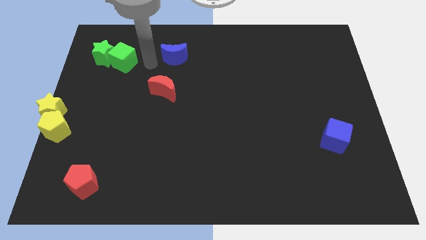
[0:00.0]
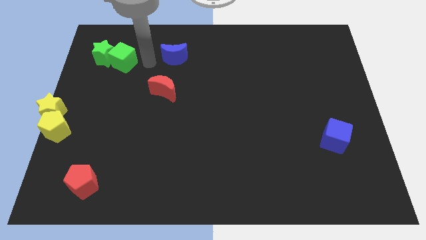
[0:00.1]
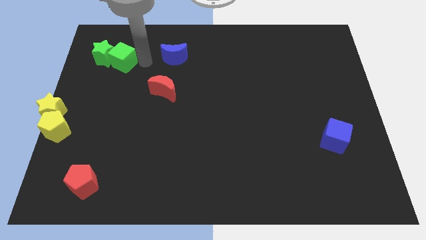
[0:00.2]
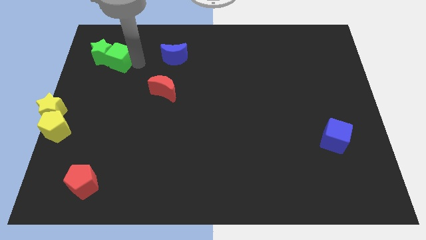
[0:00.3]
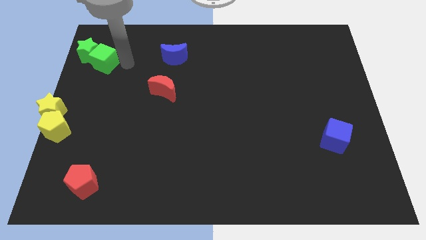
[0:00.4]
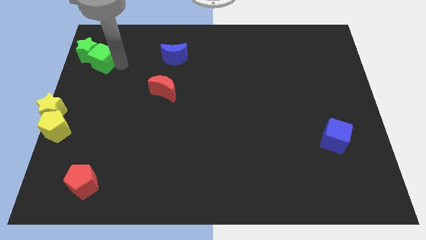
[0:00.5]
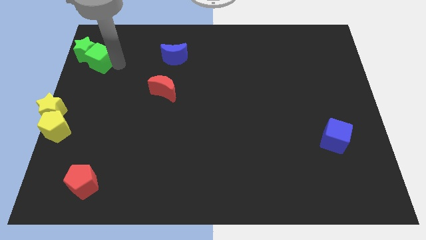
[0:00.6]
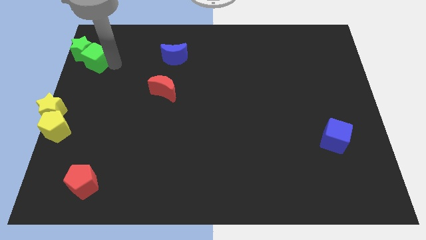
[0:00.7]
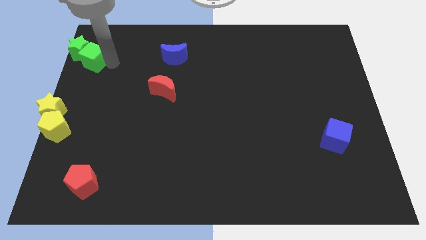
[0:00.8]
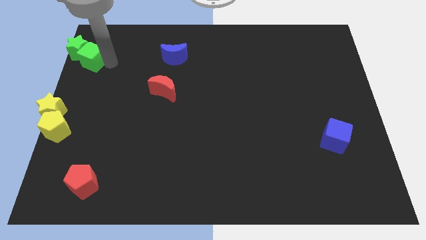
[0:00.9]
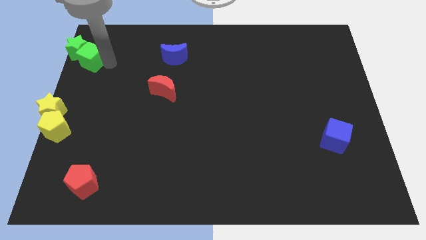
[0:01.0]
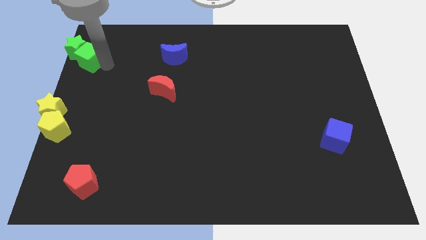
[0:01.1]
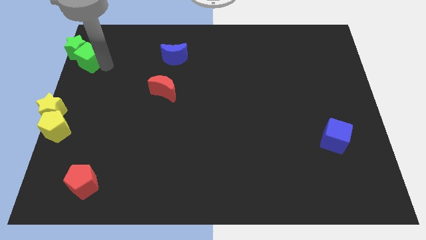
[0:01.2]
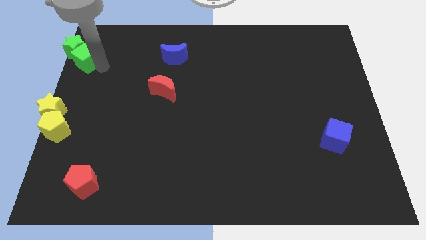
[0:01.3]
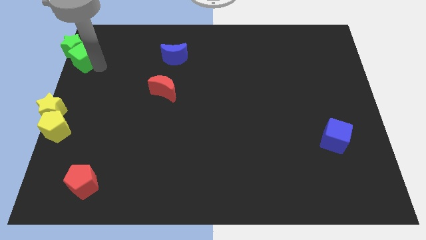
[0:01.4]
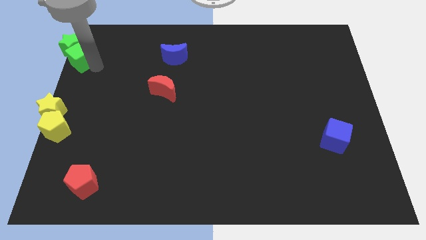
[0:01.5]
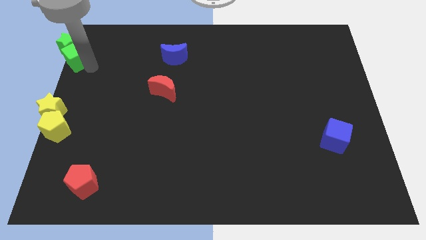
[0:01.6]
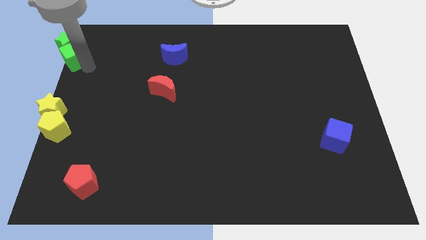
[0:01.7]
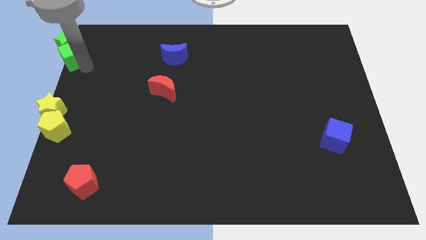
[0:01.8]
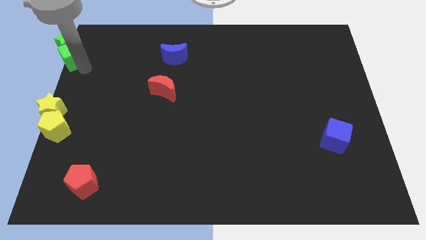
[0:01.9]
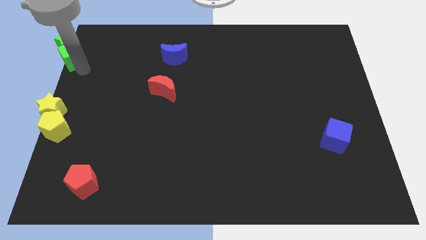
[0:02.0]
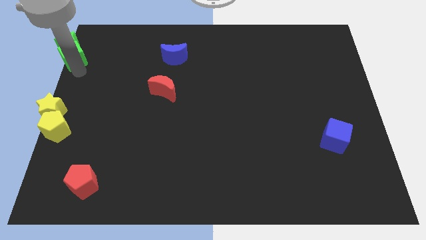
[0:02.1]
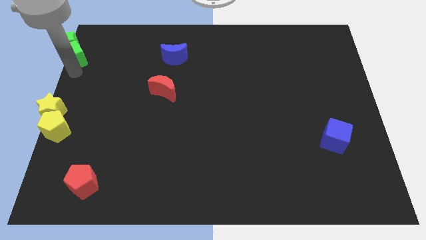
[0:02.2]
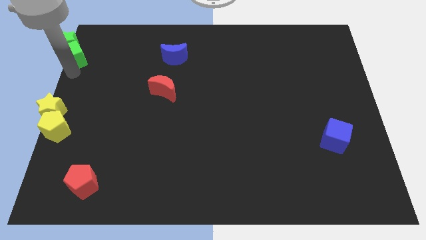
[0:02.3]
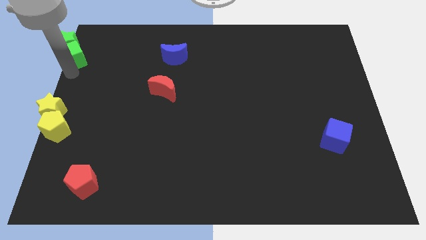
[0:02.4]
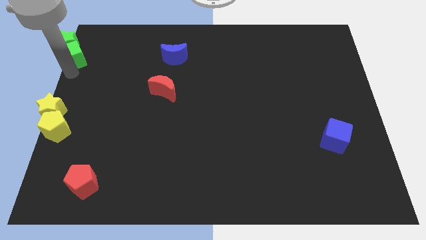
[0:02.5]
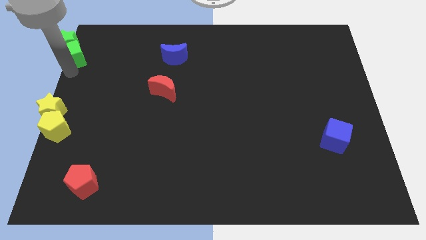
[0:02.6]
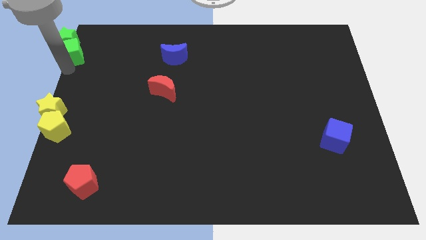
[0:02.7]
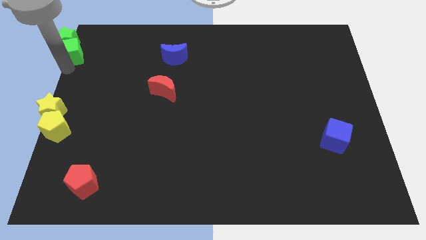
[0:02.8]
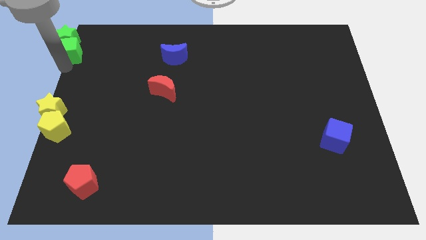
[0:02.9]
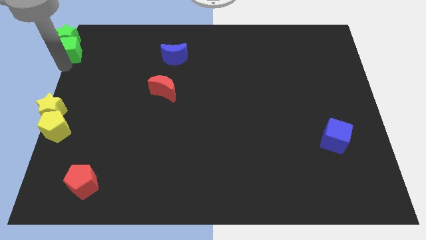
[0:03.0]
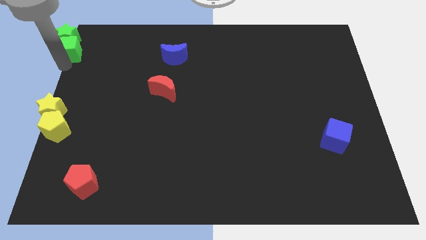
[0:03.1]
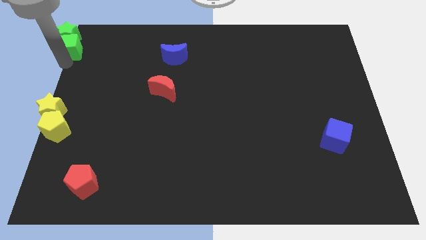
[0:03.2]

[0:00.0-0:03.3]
push green star above yellow star

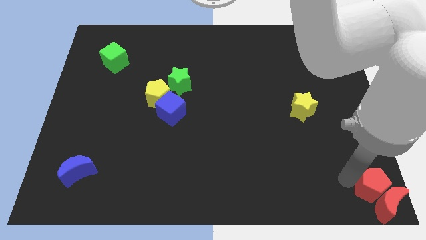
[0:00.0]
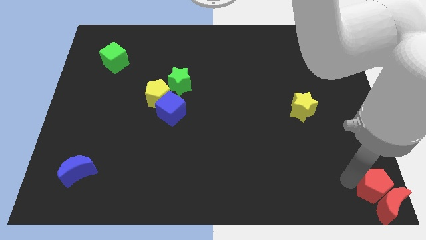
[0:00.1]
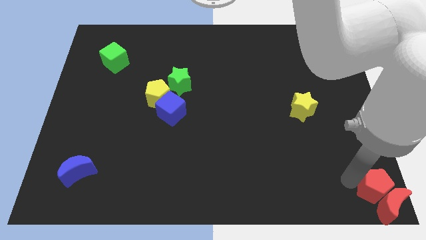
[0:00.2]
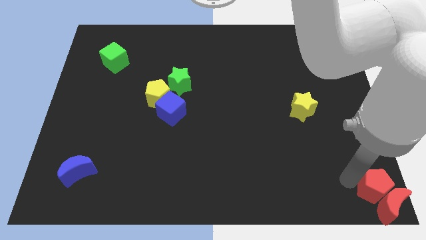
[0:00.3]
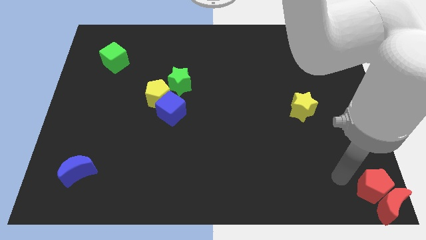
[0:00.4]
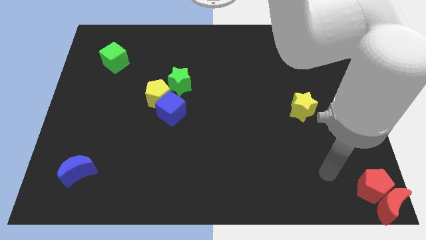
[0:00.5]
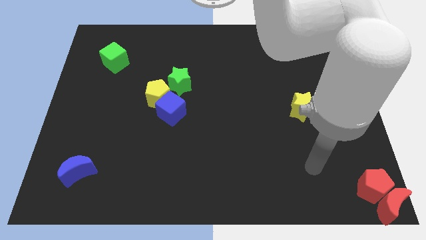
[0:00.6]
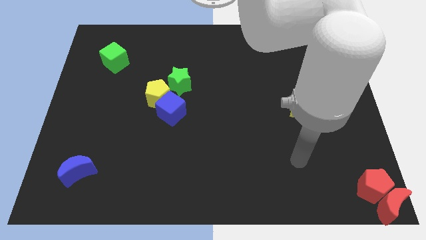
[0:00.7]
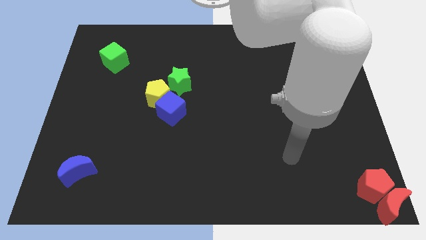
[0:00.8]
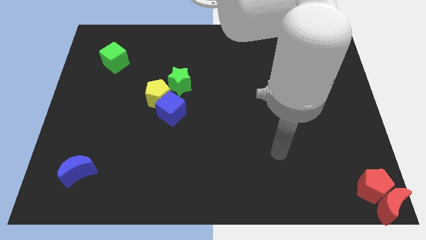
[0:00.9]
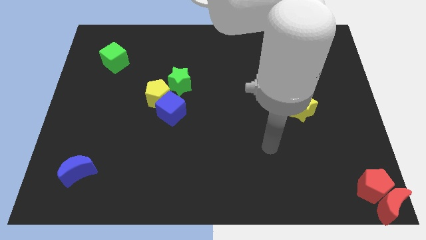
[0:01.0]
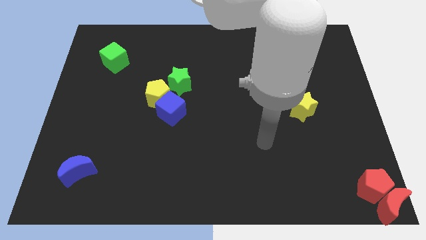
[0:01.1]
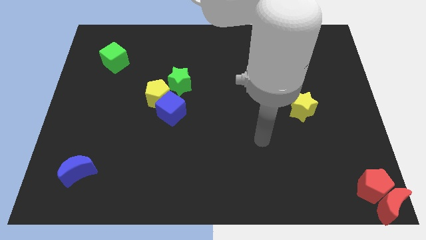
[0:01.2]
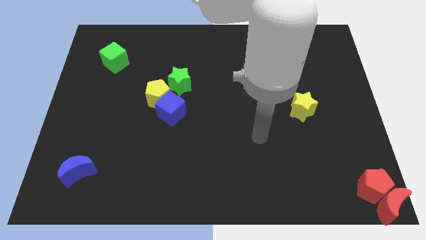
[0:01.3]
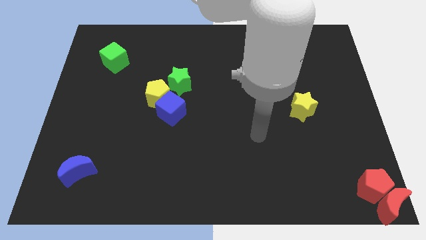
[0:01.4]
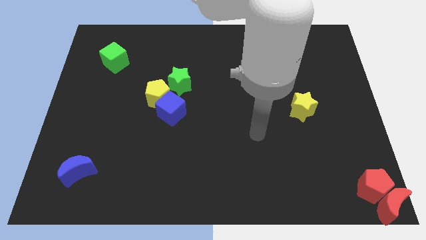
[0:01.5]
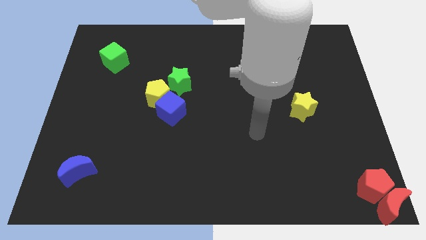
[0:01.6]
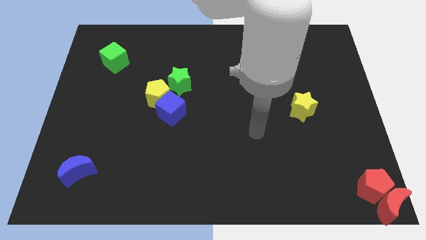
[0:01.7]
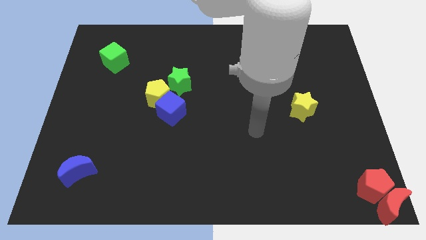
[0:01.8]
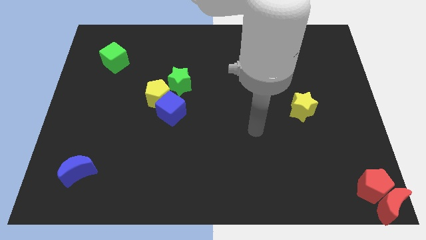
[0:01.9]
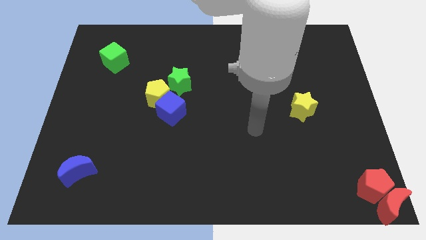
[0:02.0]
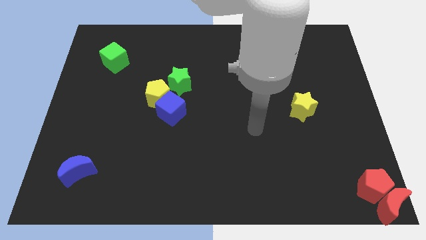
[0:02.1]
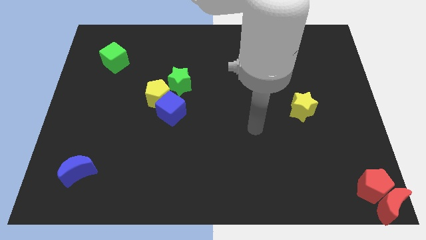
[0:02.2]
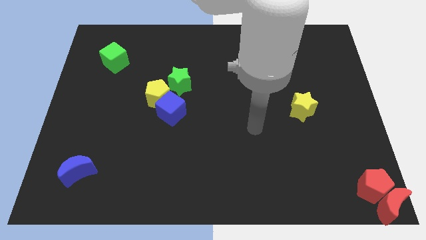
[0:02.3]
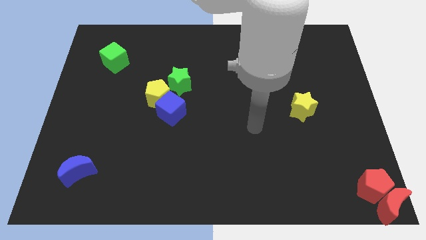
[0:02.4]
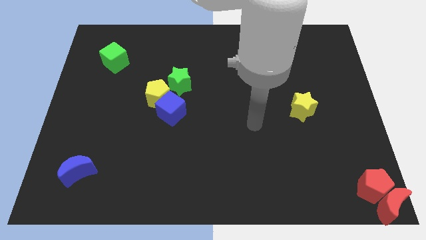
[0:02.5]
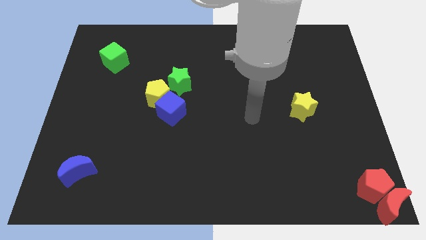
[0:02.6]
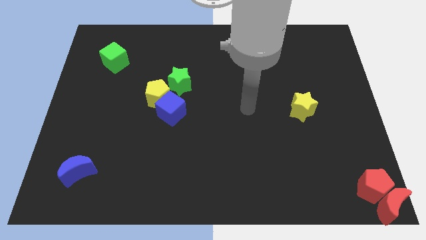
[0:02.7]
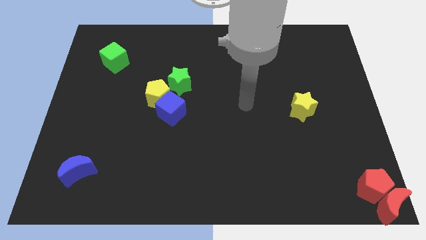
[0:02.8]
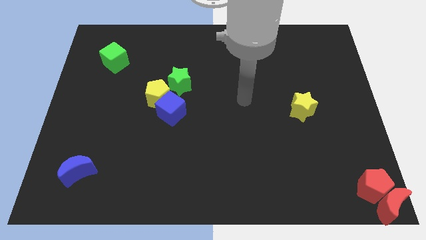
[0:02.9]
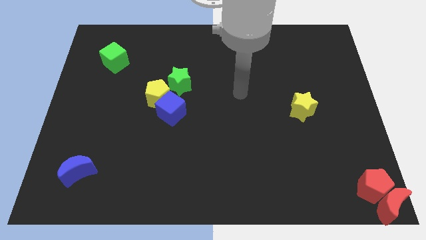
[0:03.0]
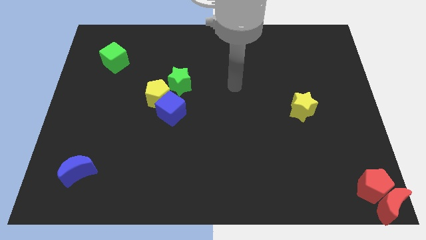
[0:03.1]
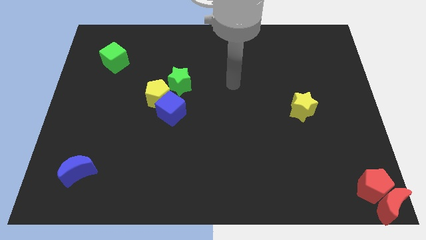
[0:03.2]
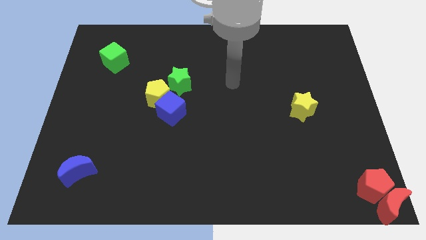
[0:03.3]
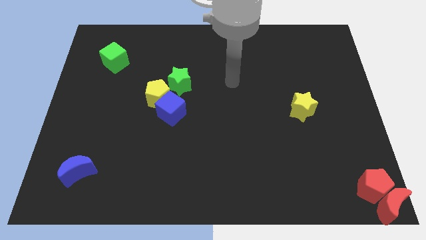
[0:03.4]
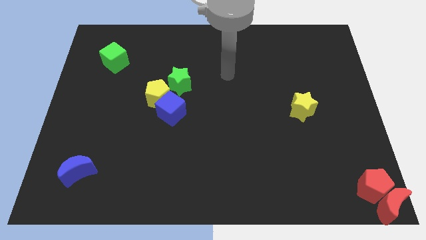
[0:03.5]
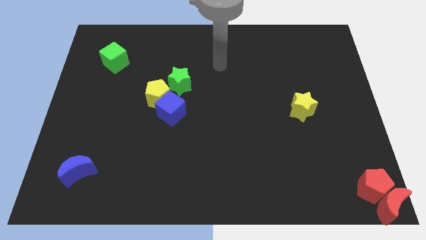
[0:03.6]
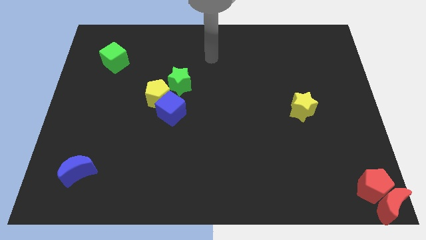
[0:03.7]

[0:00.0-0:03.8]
drag the pointer away from the red blocks

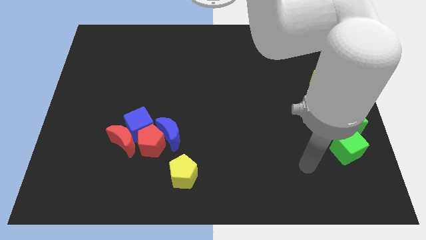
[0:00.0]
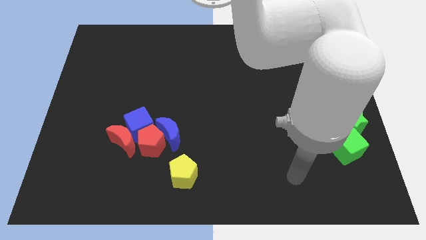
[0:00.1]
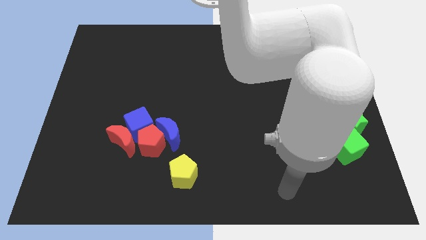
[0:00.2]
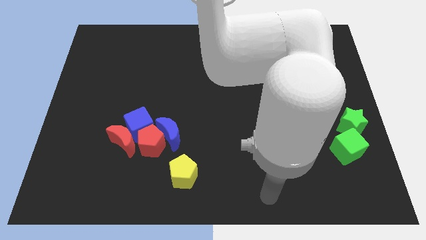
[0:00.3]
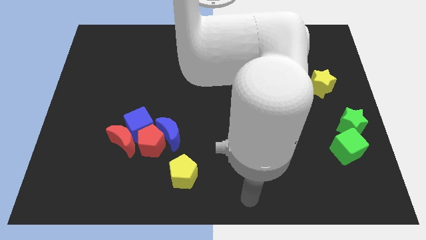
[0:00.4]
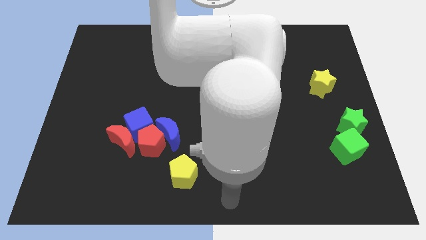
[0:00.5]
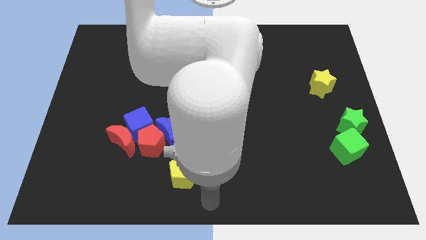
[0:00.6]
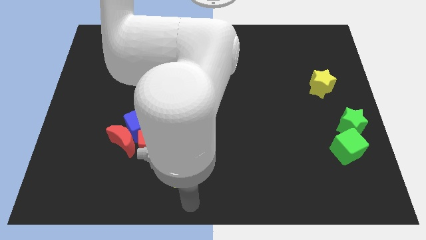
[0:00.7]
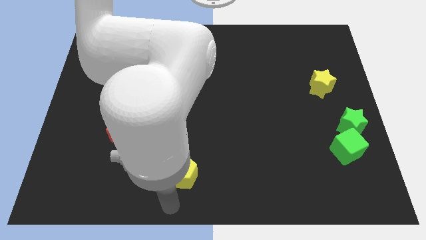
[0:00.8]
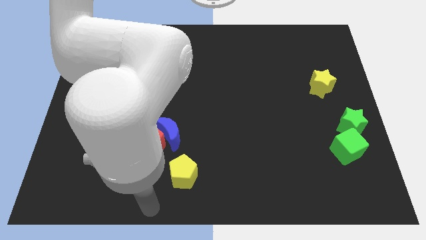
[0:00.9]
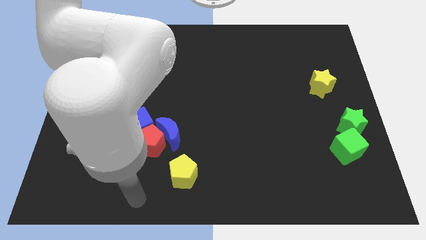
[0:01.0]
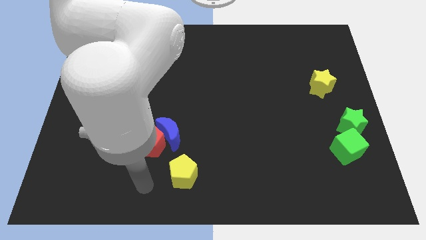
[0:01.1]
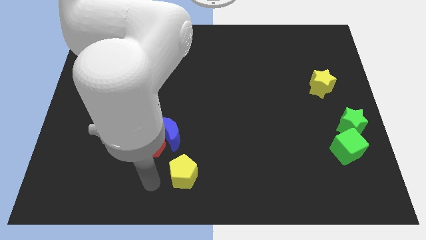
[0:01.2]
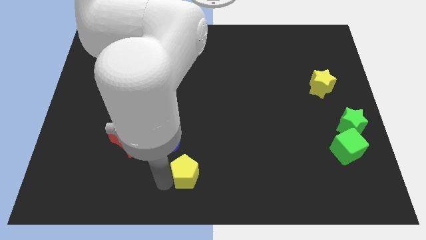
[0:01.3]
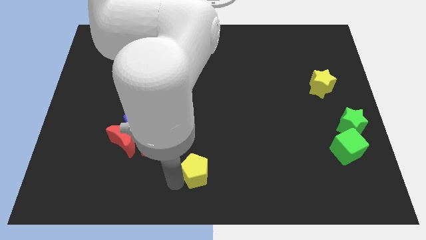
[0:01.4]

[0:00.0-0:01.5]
tap the yellow pentagon

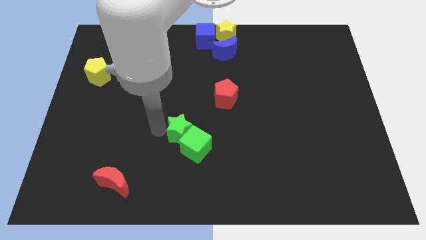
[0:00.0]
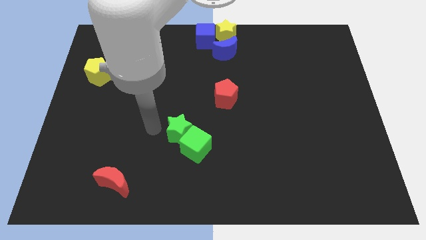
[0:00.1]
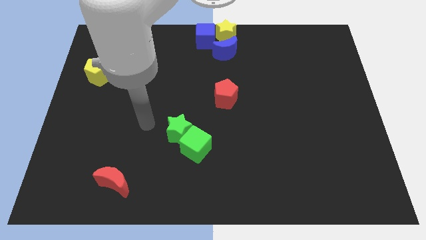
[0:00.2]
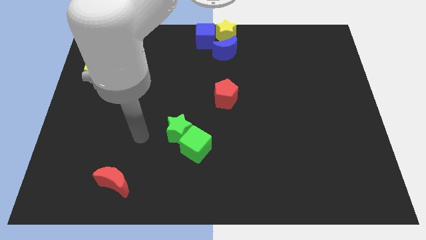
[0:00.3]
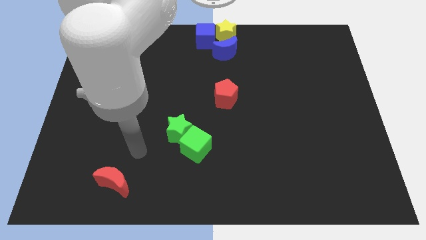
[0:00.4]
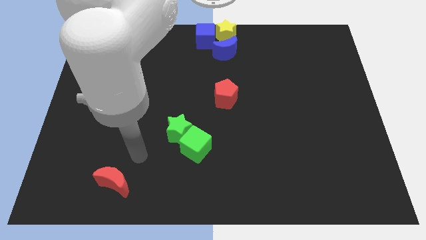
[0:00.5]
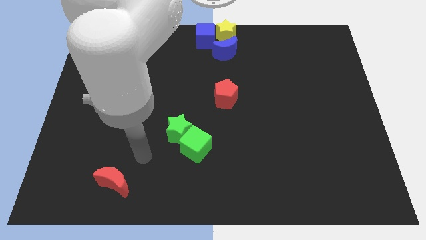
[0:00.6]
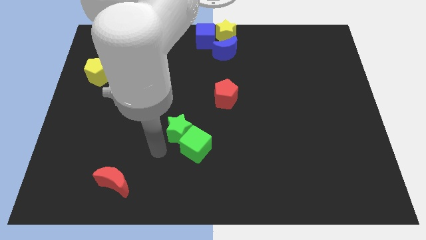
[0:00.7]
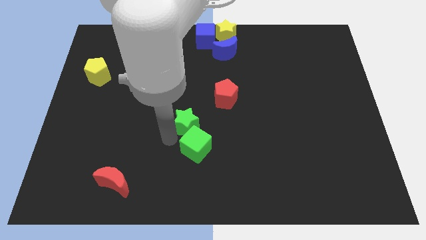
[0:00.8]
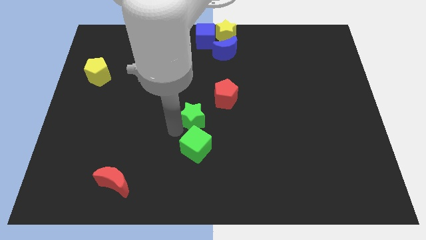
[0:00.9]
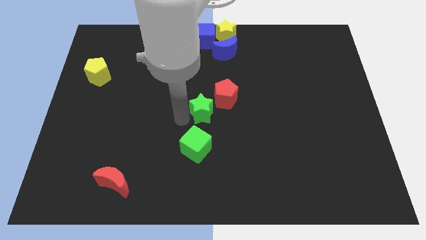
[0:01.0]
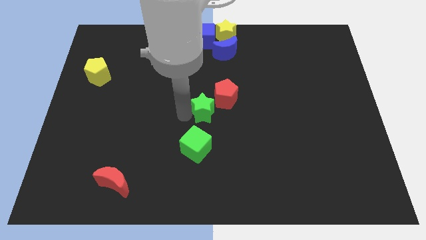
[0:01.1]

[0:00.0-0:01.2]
move the green star to the top side of the green cube
